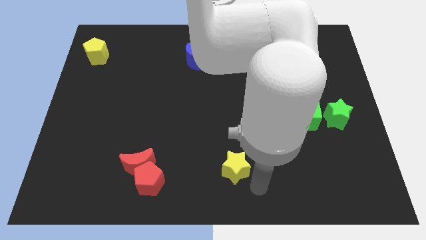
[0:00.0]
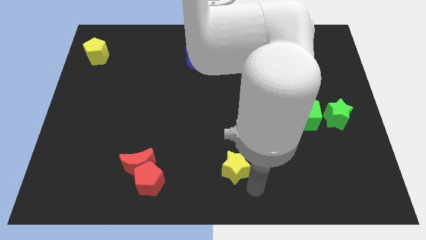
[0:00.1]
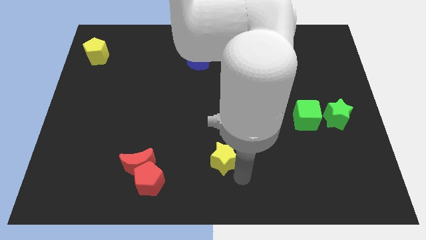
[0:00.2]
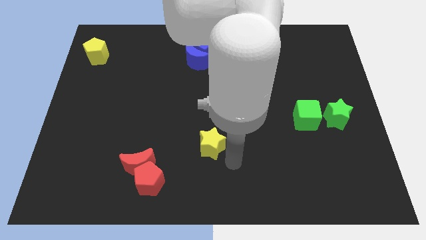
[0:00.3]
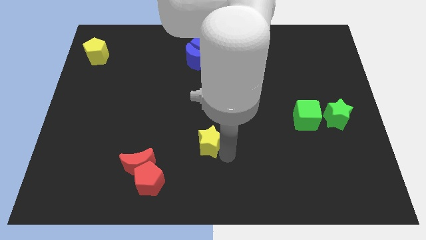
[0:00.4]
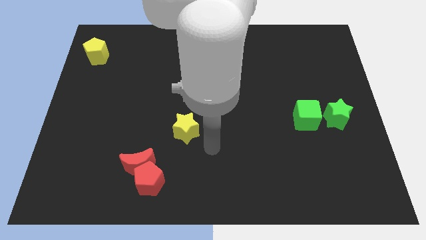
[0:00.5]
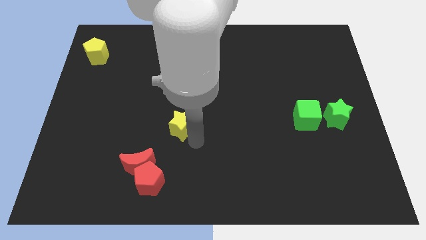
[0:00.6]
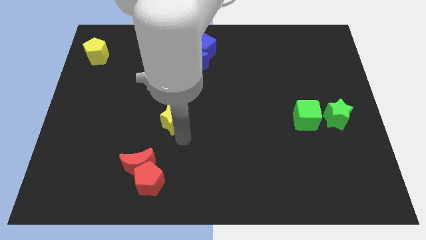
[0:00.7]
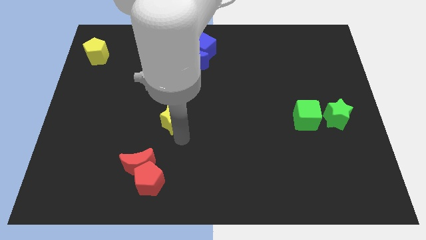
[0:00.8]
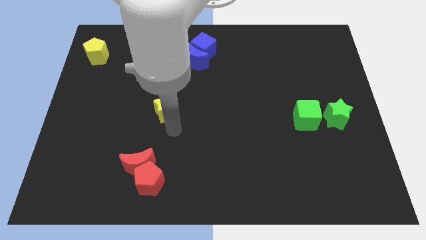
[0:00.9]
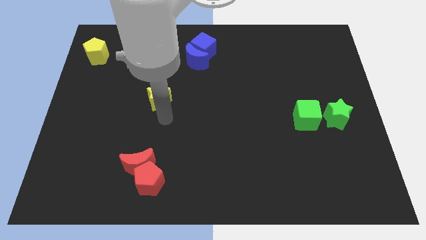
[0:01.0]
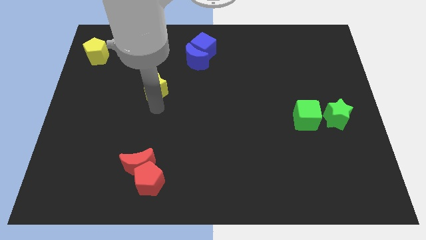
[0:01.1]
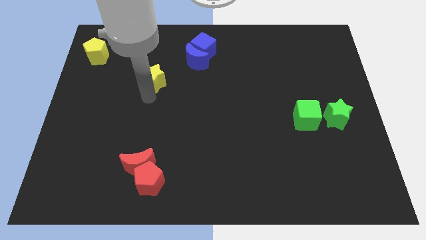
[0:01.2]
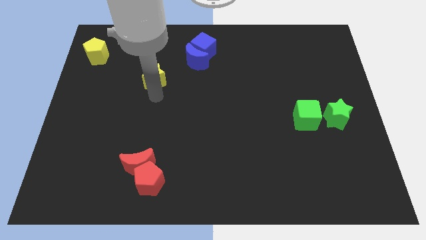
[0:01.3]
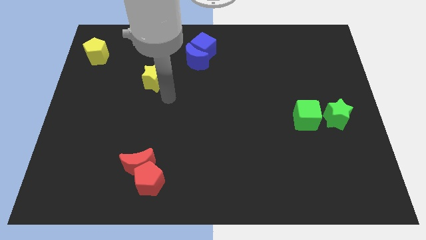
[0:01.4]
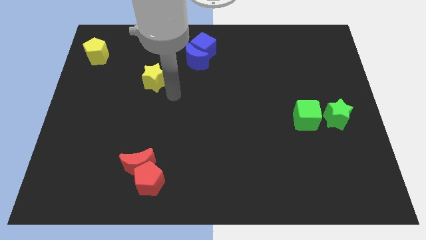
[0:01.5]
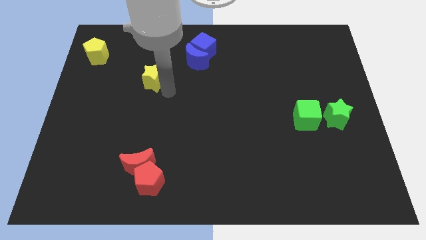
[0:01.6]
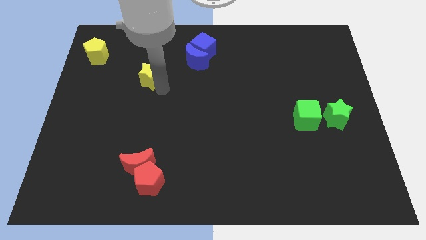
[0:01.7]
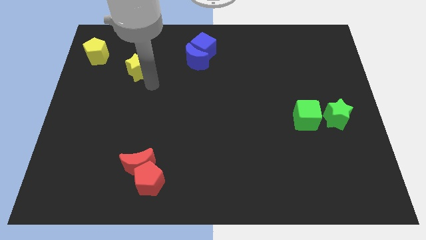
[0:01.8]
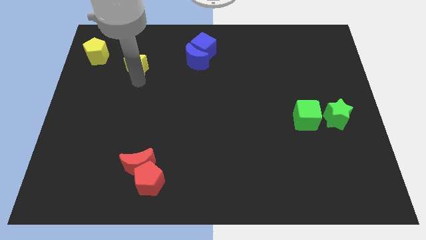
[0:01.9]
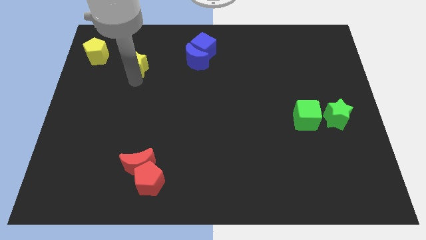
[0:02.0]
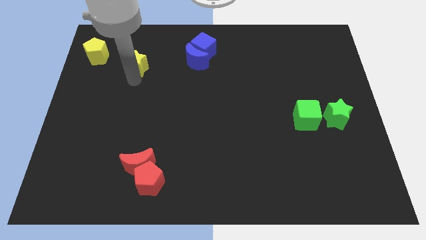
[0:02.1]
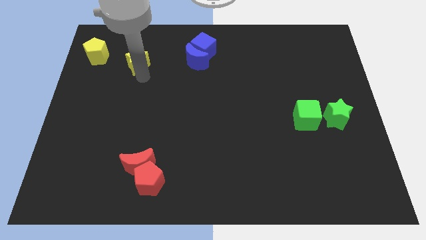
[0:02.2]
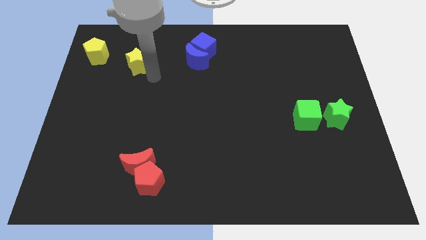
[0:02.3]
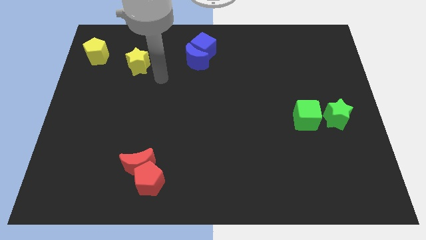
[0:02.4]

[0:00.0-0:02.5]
move the yellow star to left of the blue blocks

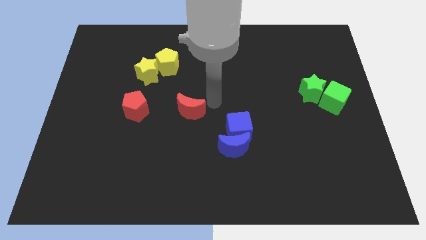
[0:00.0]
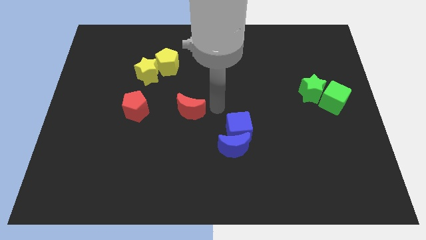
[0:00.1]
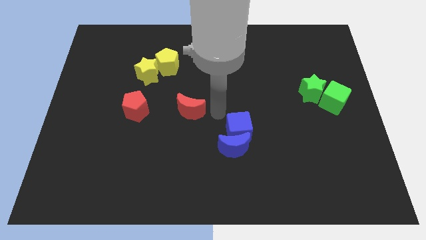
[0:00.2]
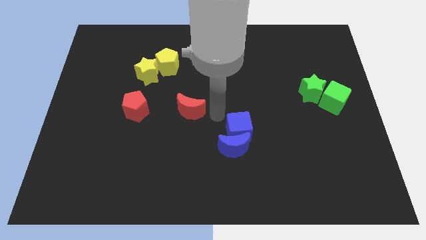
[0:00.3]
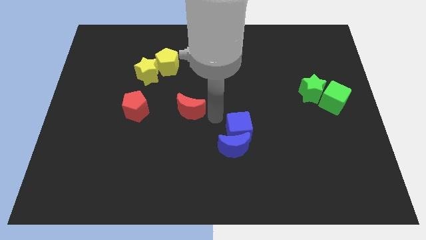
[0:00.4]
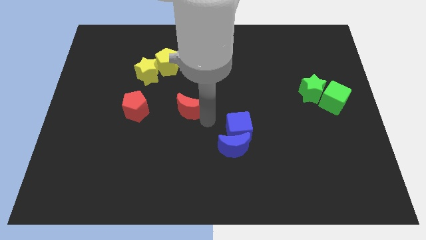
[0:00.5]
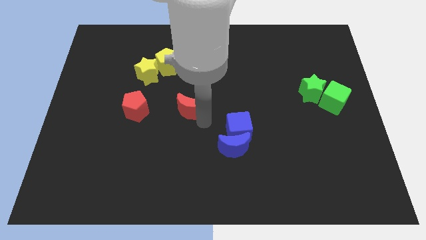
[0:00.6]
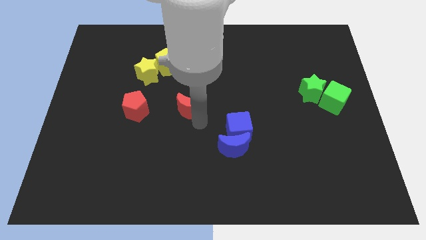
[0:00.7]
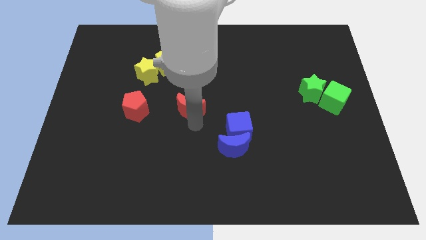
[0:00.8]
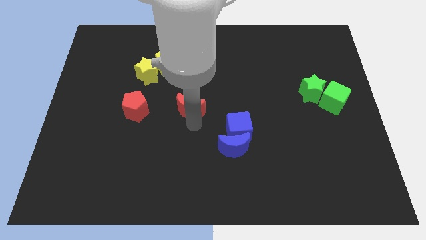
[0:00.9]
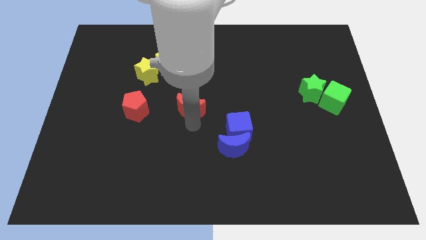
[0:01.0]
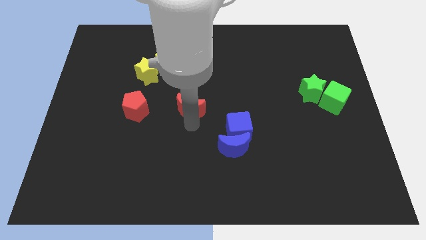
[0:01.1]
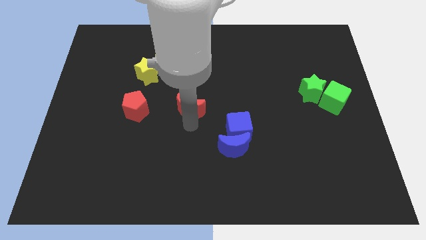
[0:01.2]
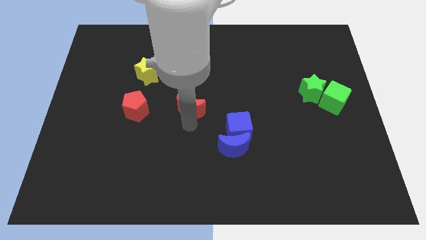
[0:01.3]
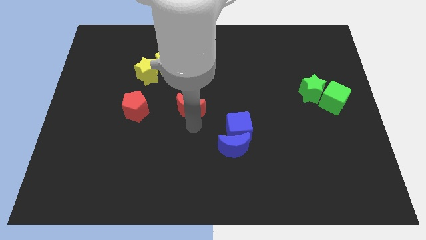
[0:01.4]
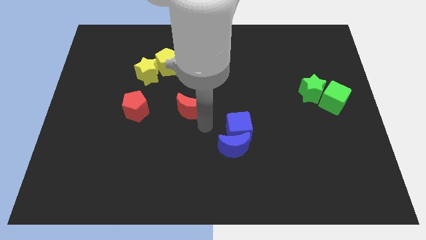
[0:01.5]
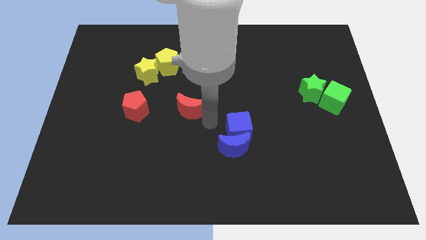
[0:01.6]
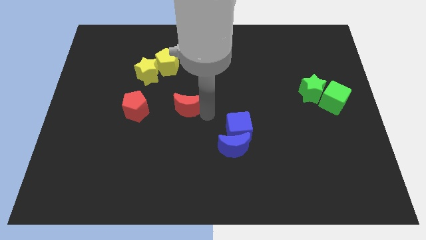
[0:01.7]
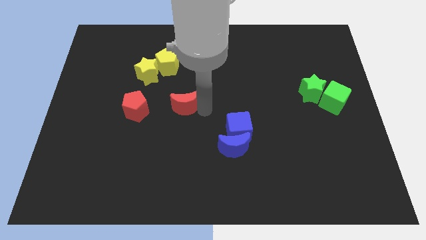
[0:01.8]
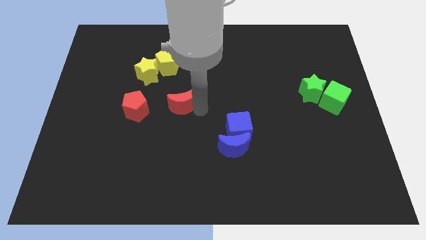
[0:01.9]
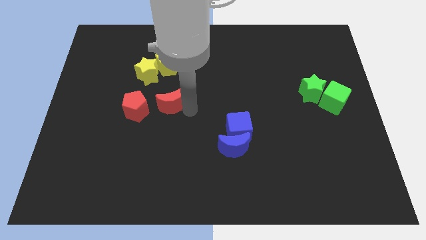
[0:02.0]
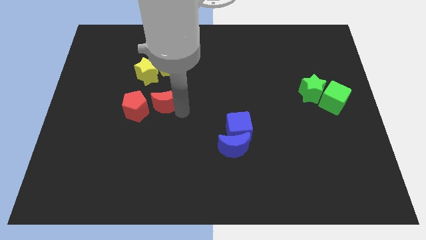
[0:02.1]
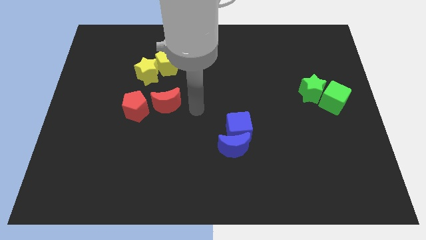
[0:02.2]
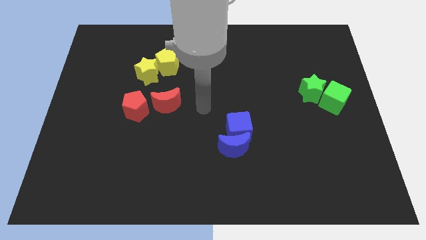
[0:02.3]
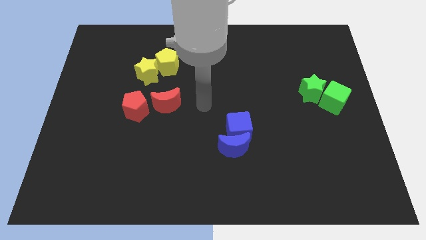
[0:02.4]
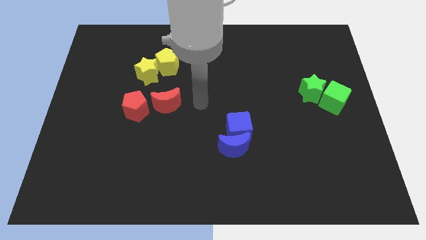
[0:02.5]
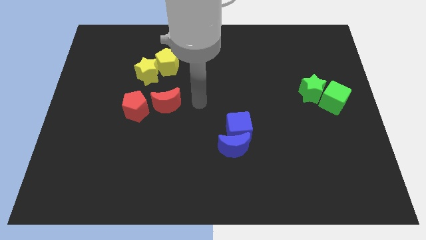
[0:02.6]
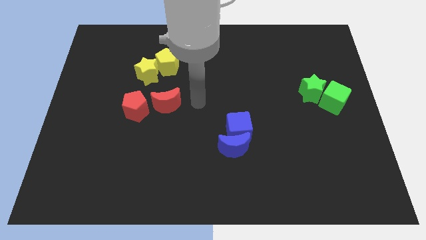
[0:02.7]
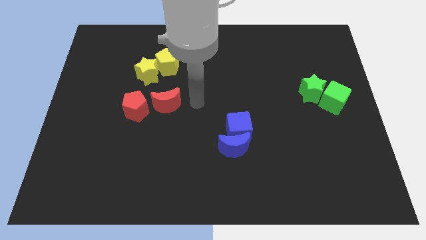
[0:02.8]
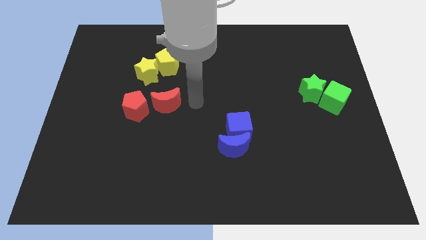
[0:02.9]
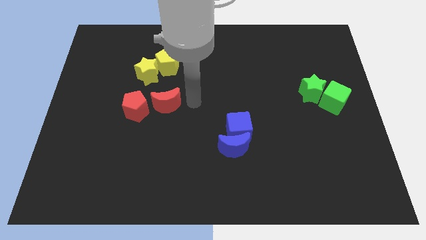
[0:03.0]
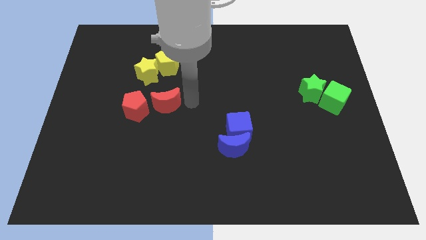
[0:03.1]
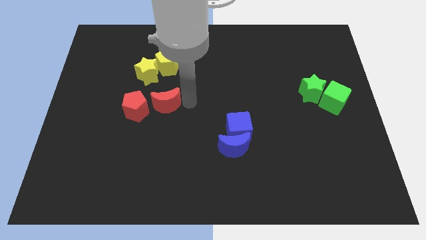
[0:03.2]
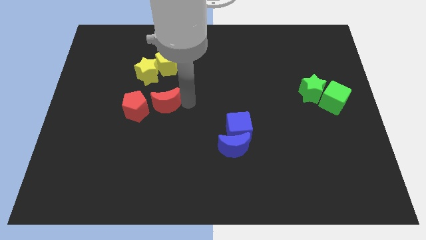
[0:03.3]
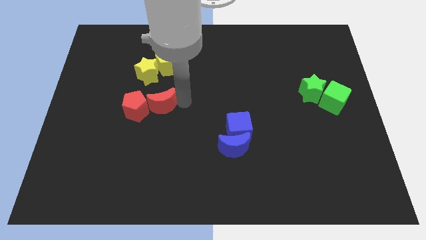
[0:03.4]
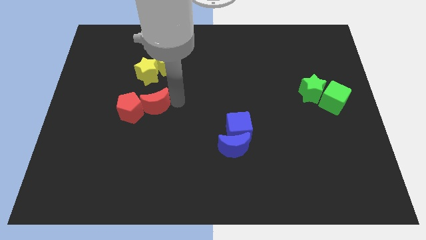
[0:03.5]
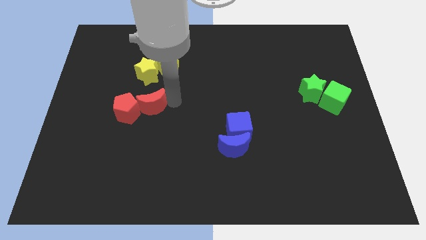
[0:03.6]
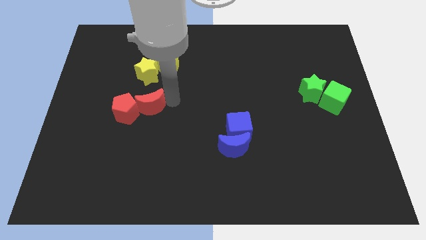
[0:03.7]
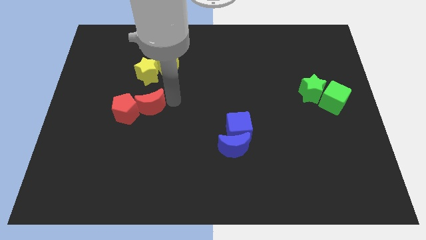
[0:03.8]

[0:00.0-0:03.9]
push the red moon into the red pentagon

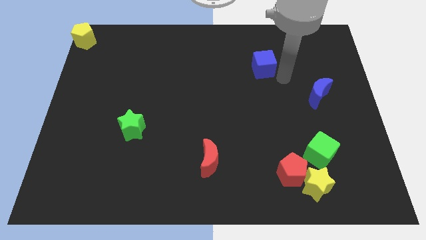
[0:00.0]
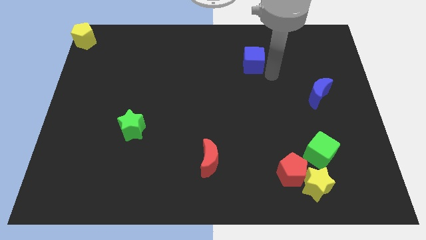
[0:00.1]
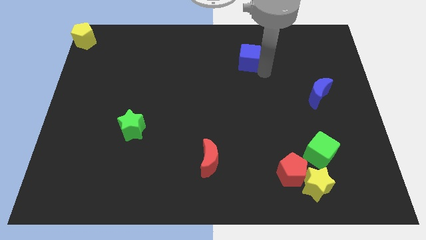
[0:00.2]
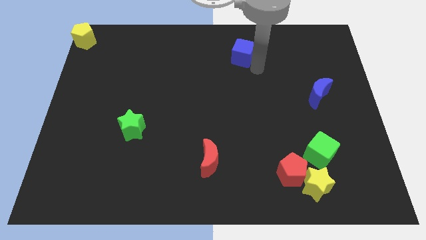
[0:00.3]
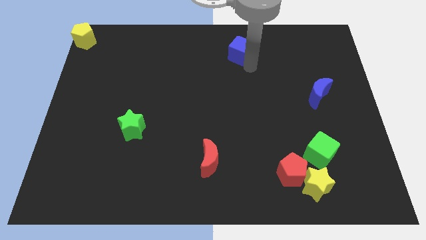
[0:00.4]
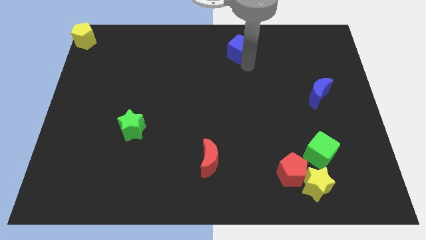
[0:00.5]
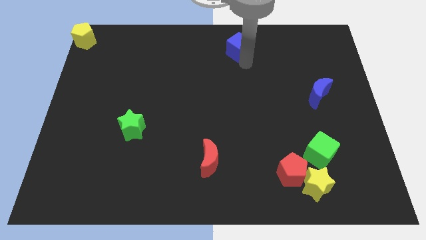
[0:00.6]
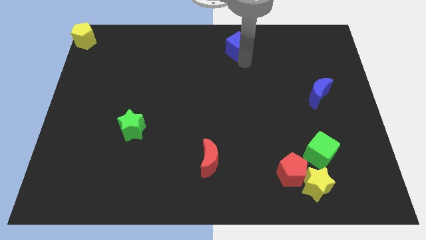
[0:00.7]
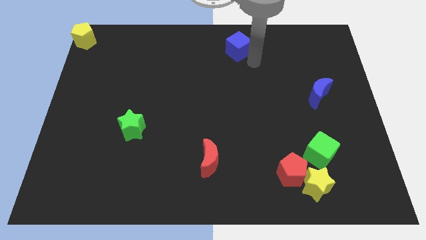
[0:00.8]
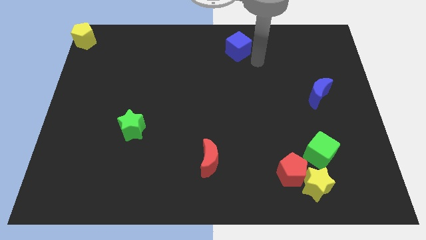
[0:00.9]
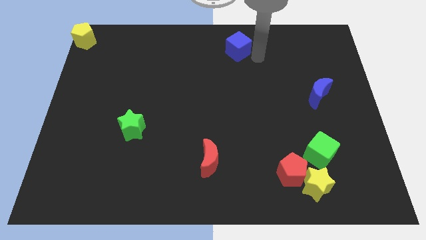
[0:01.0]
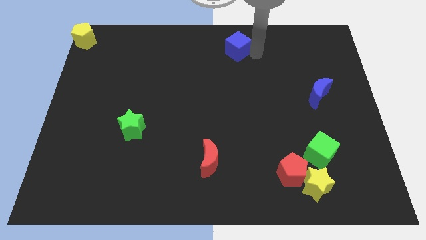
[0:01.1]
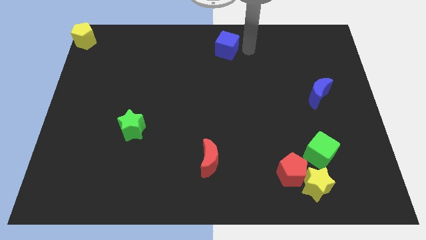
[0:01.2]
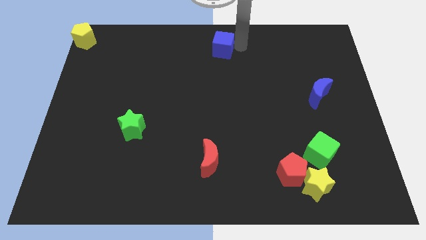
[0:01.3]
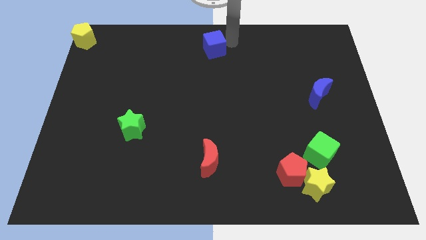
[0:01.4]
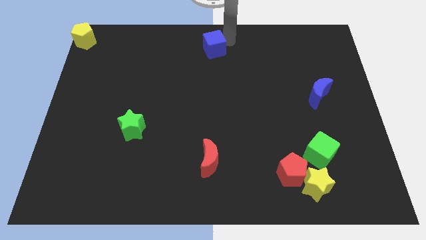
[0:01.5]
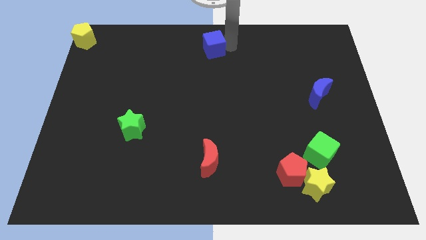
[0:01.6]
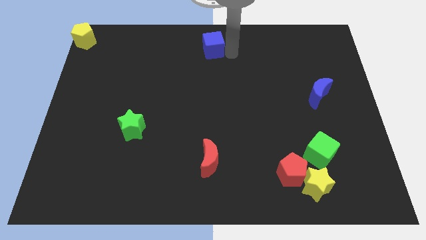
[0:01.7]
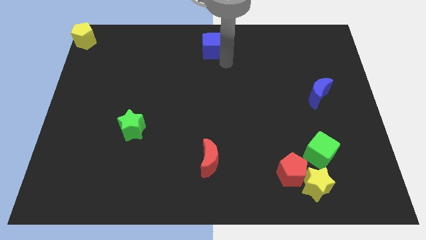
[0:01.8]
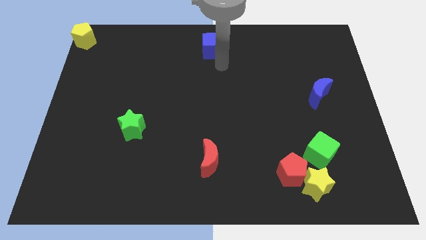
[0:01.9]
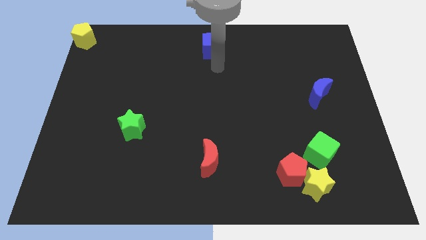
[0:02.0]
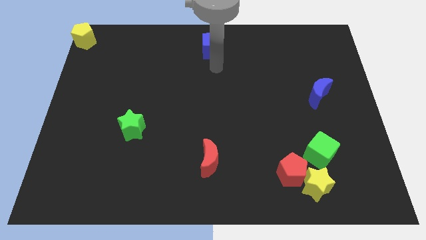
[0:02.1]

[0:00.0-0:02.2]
push blue cube to the upwards

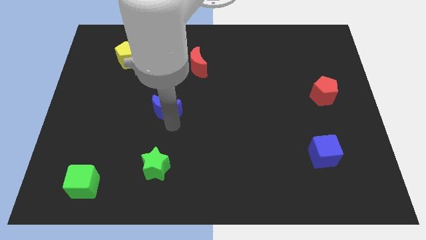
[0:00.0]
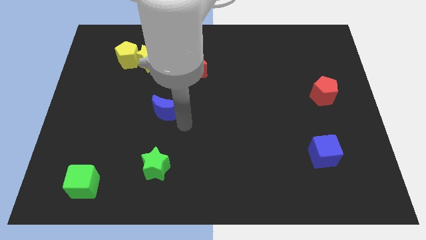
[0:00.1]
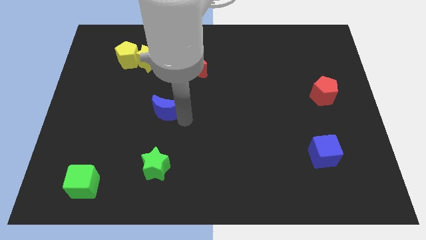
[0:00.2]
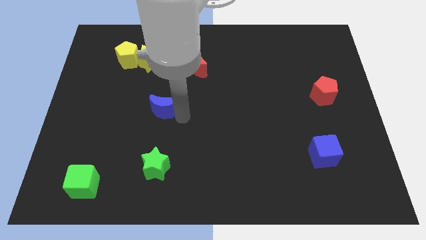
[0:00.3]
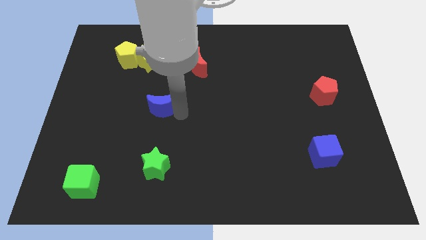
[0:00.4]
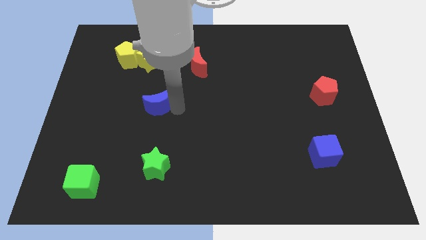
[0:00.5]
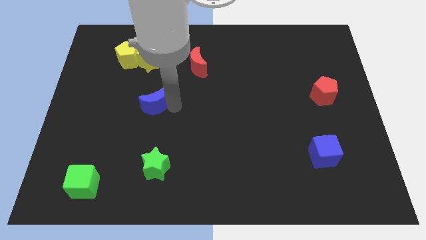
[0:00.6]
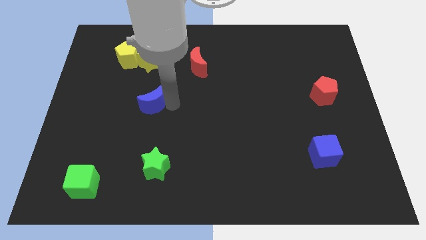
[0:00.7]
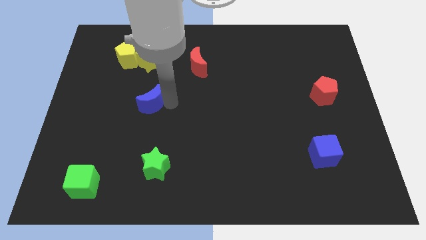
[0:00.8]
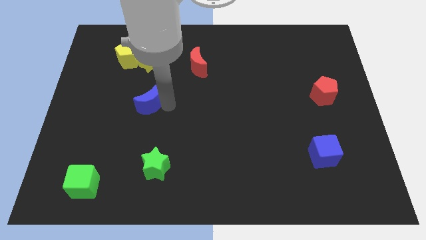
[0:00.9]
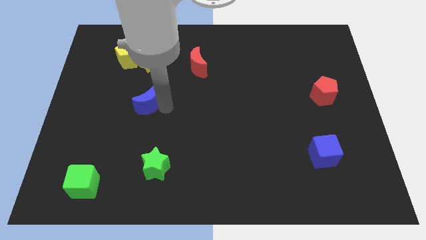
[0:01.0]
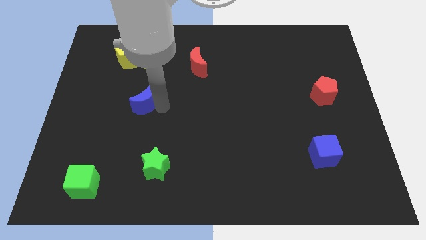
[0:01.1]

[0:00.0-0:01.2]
move blue moon slightly left
